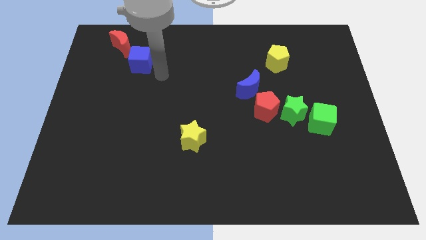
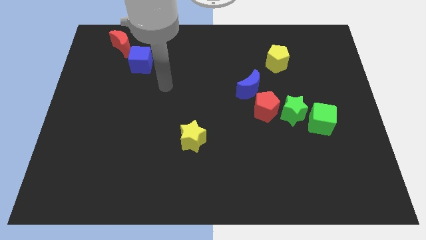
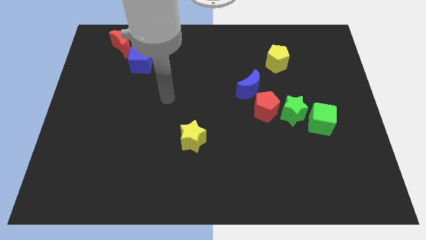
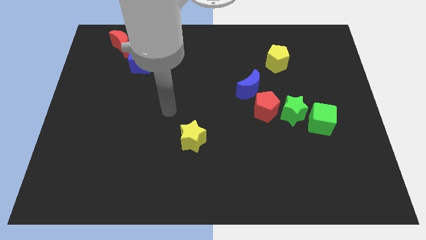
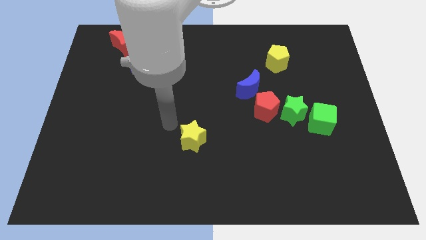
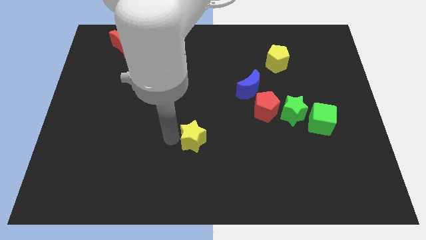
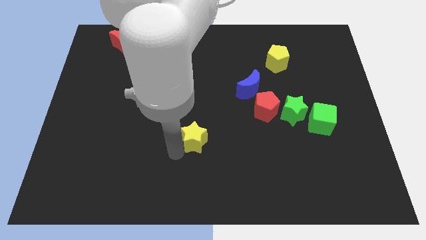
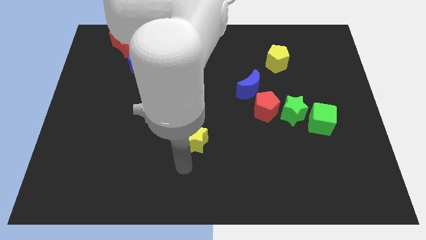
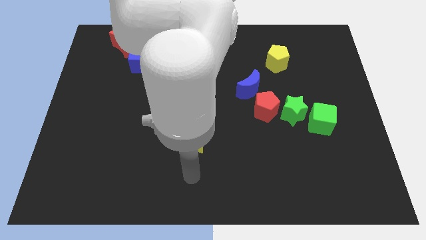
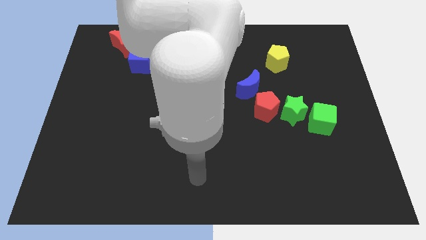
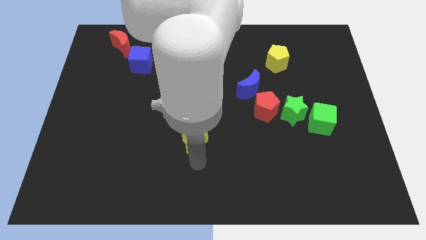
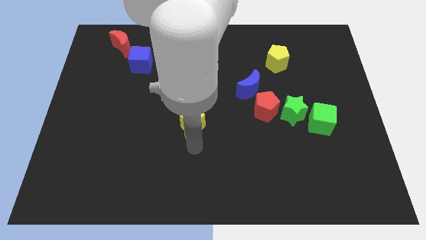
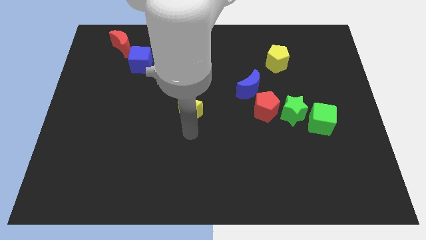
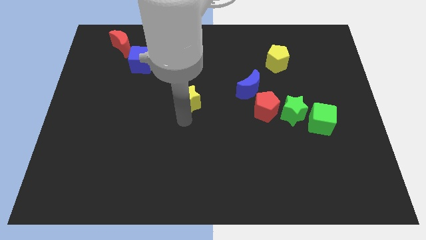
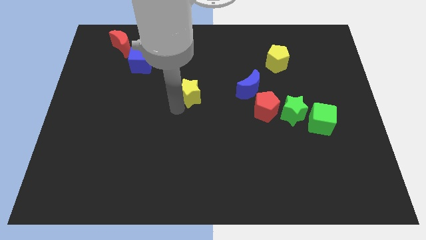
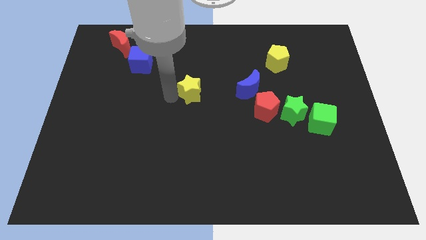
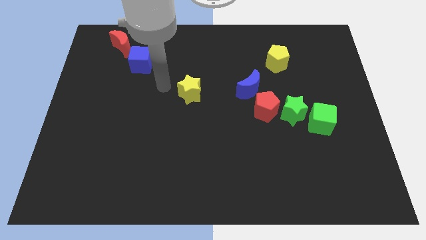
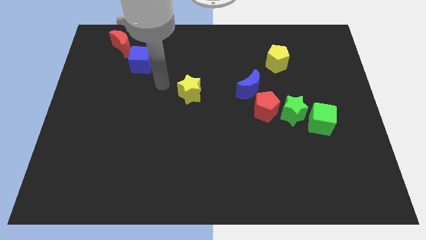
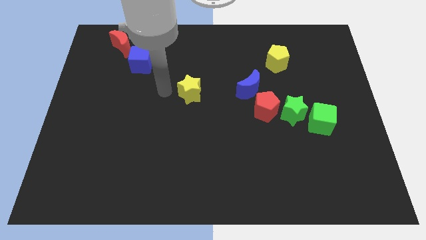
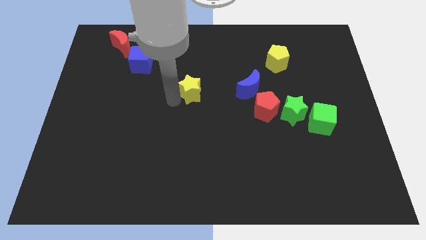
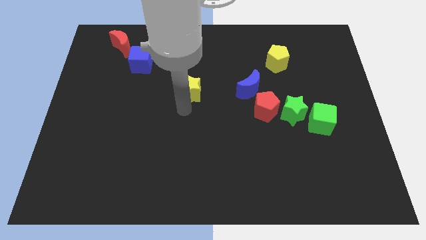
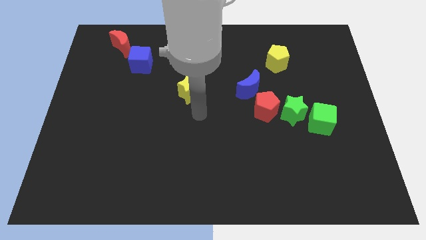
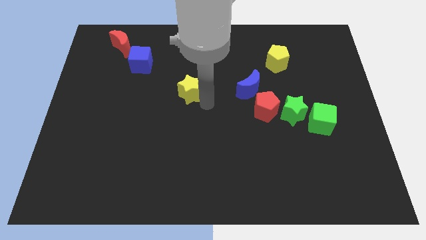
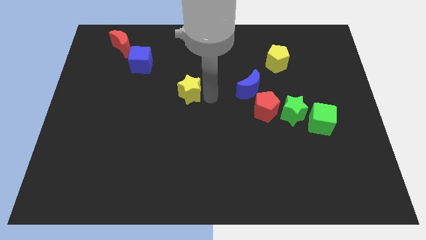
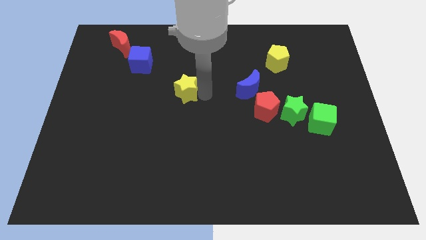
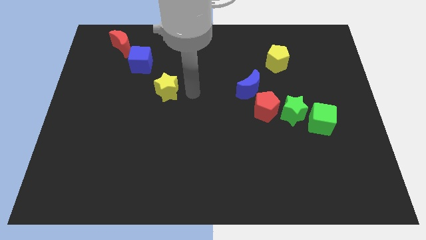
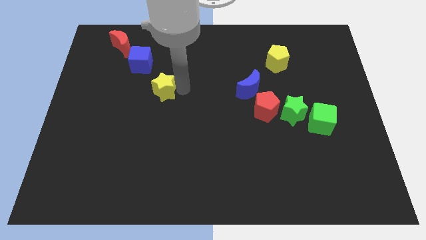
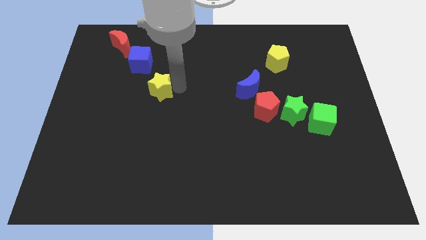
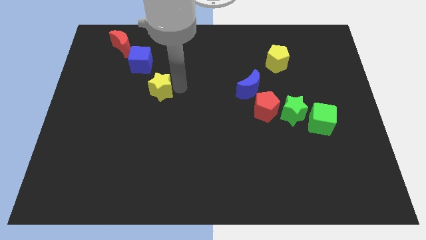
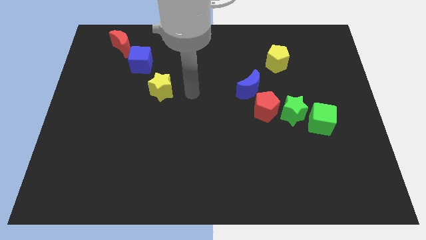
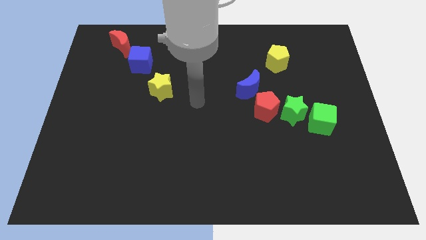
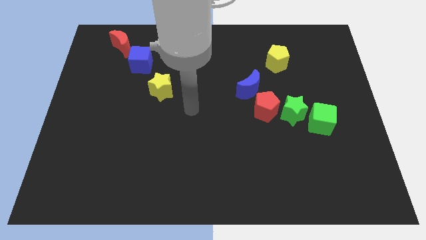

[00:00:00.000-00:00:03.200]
push the yellow star upward

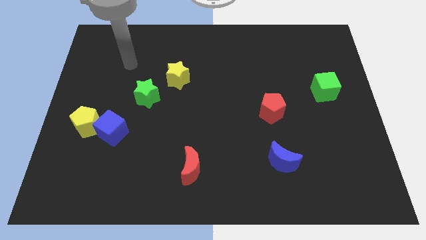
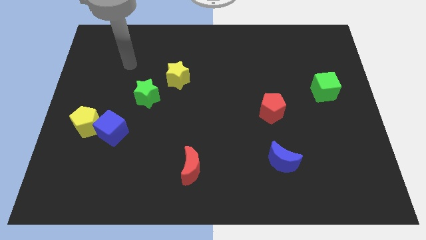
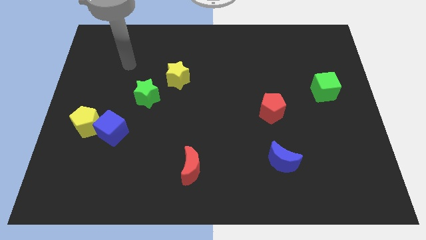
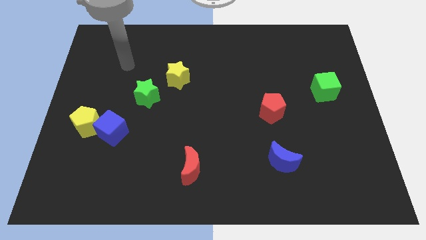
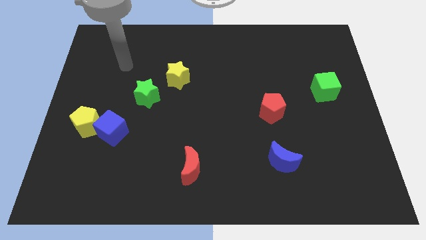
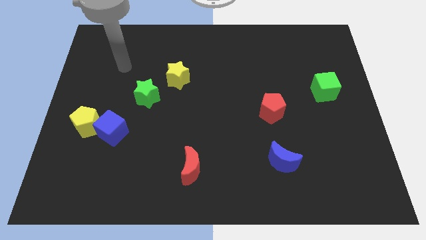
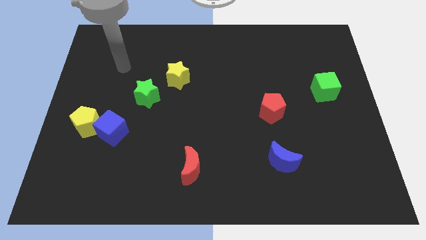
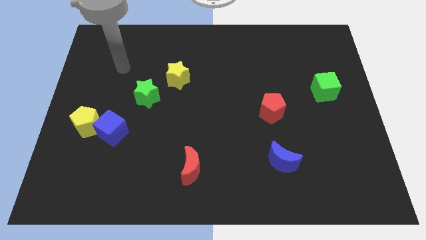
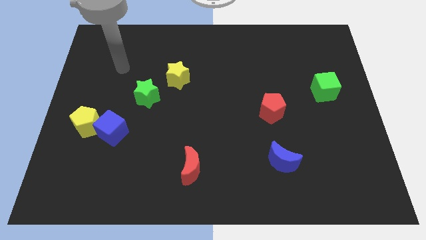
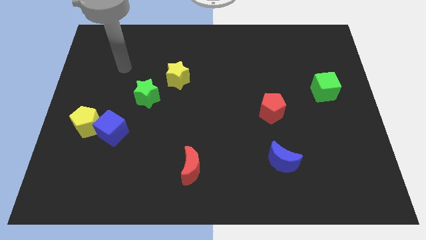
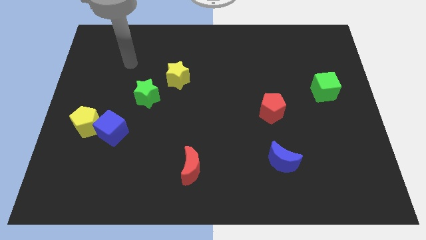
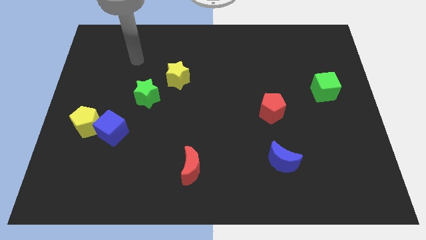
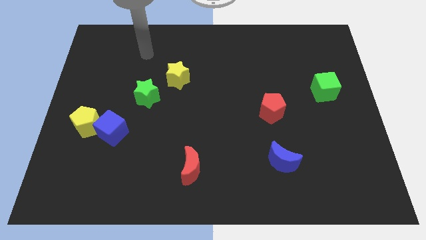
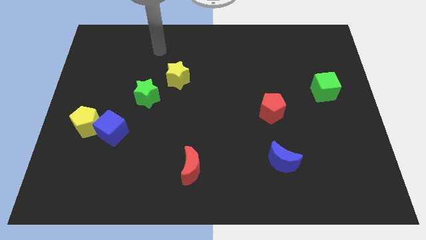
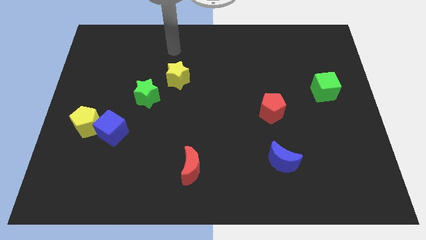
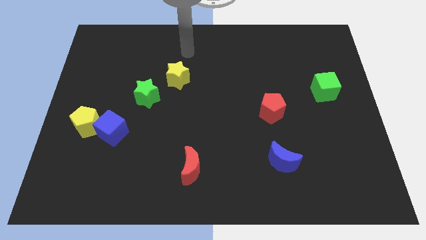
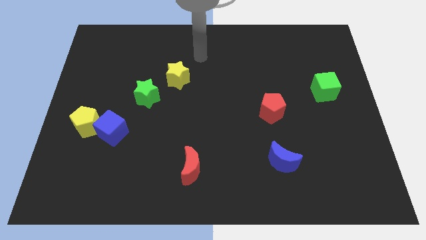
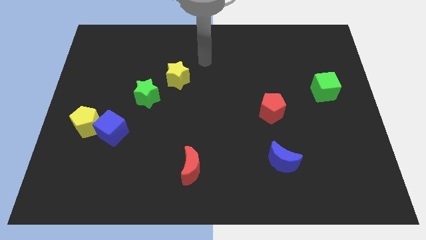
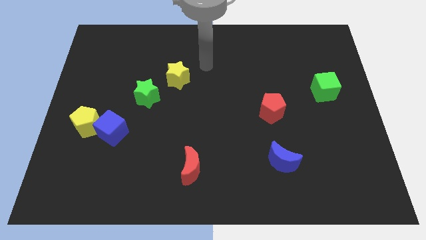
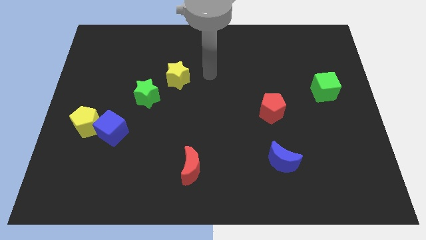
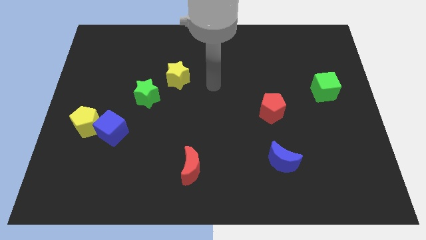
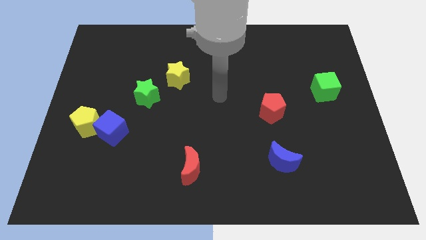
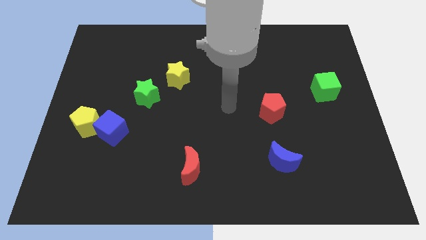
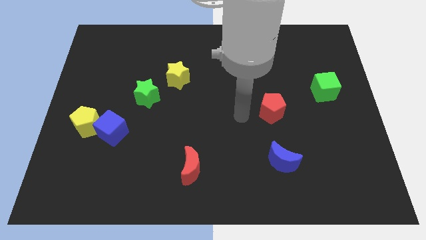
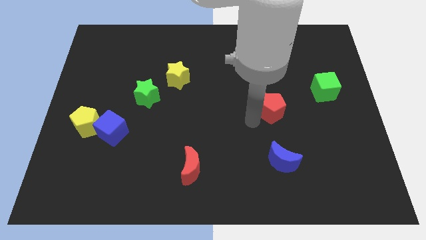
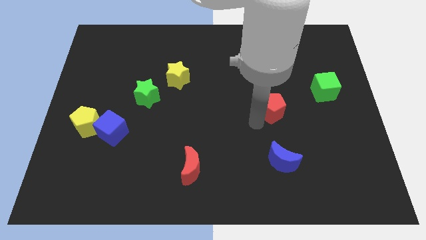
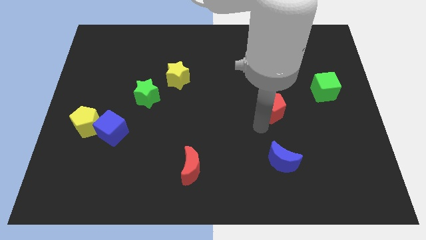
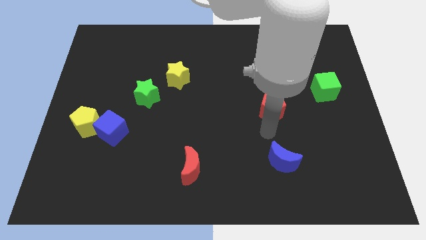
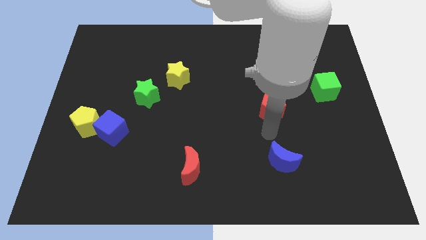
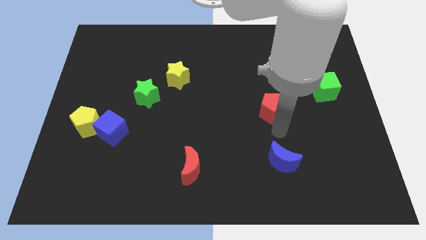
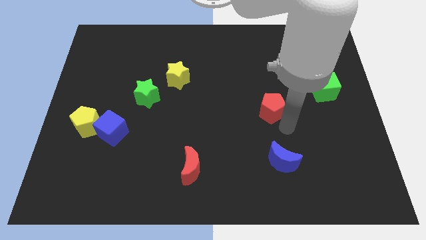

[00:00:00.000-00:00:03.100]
move your arm to the bottom right side of the red pentagon

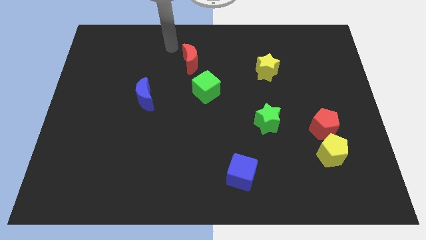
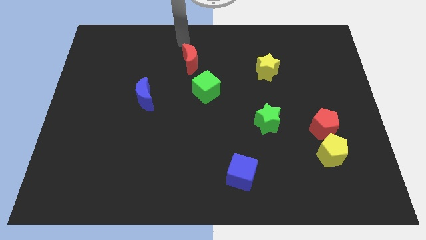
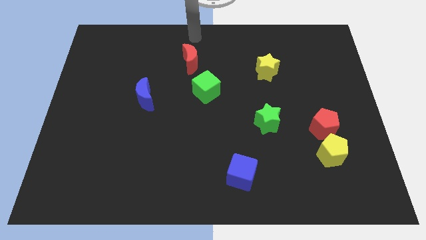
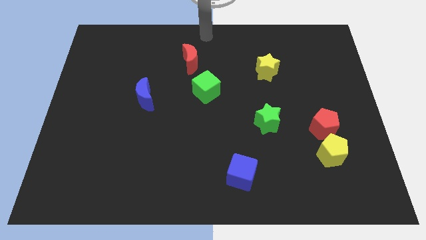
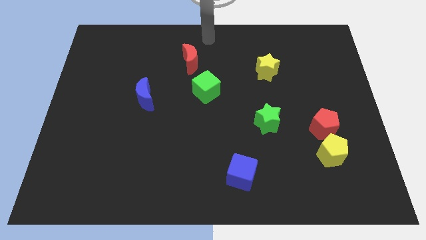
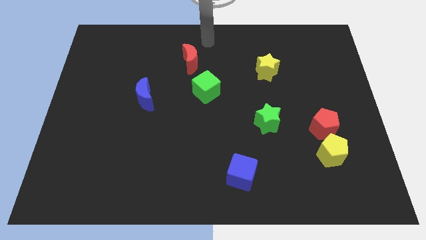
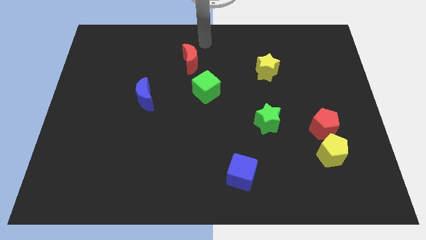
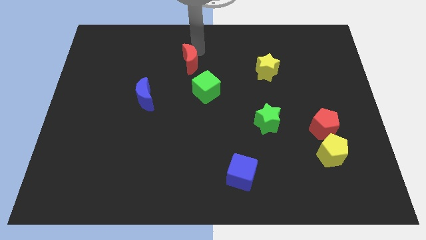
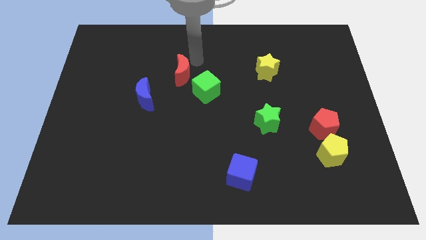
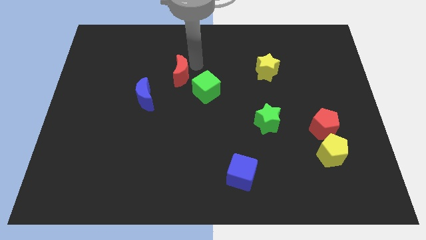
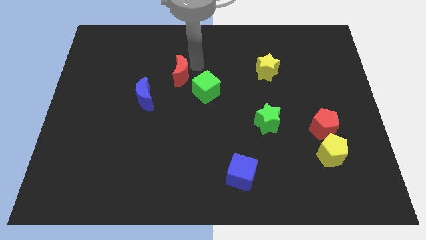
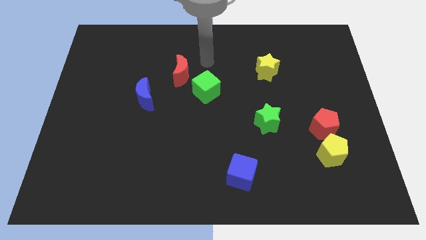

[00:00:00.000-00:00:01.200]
push the red crescent slightly to the bottom

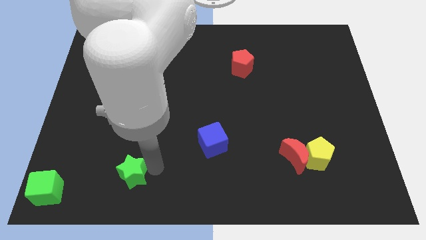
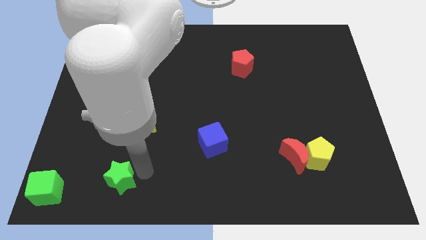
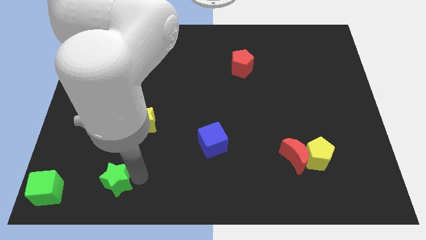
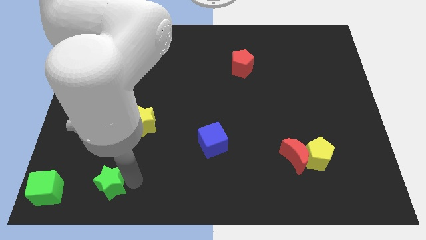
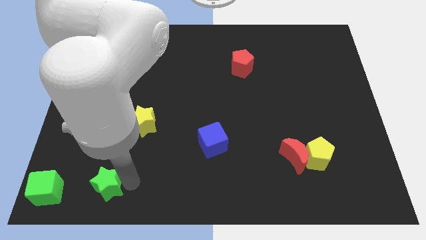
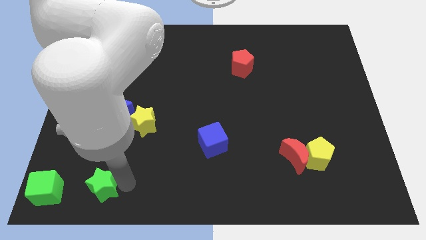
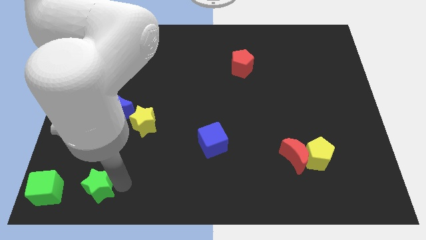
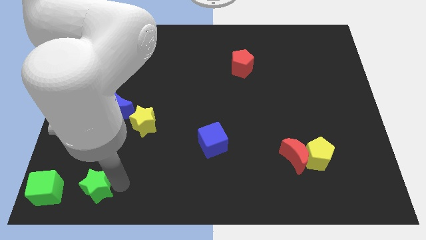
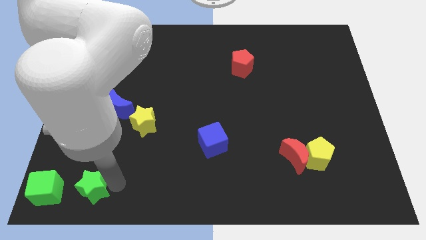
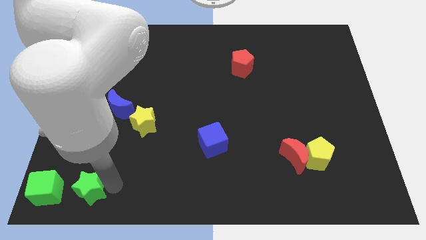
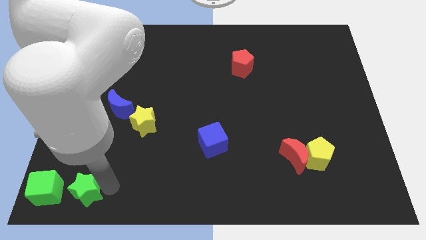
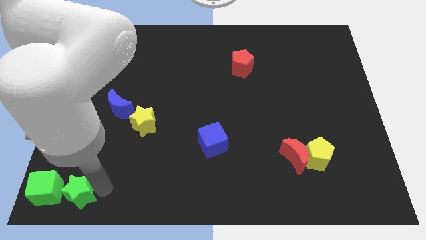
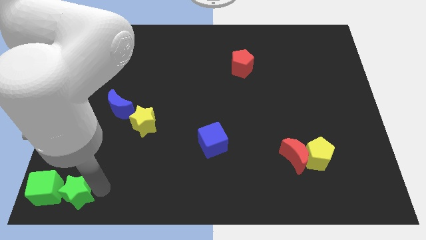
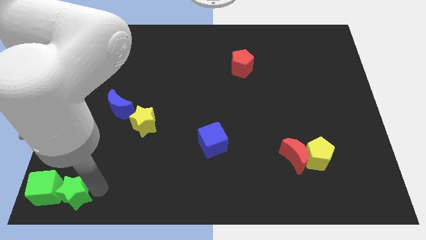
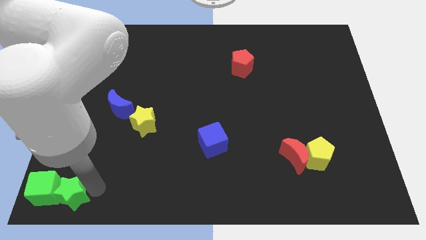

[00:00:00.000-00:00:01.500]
push the green star to the right of the green cube
